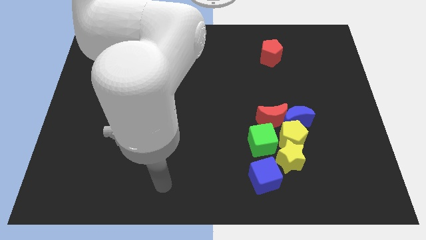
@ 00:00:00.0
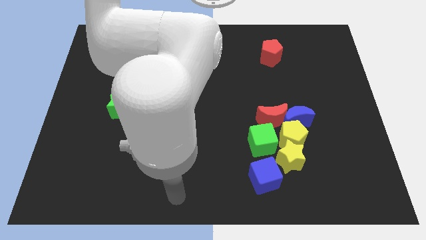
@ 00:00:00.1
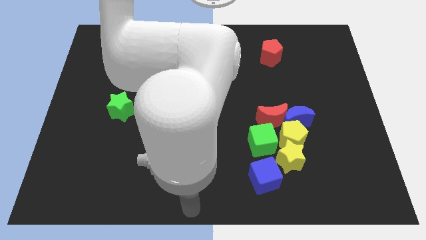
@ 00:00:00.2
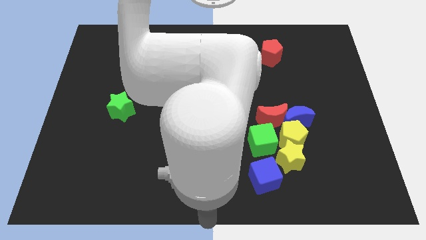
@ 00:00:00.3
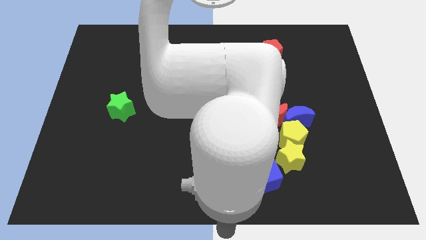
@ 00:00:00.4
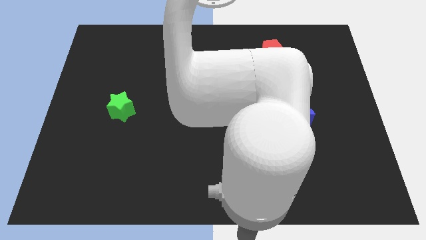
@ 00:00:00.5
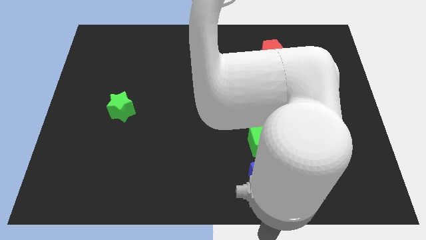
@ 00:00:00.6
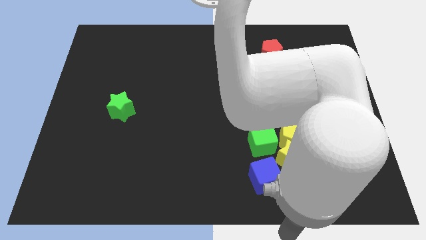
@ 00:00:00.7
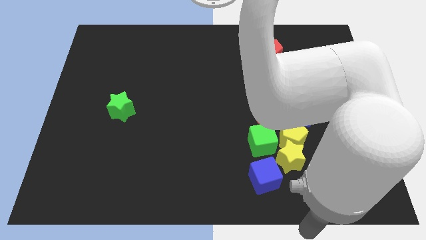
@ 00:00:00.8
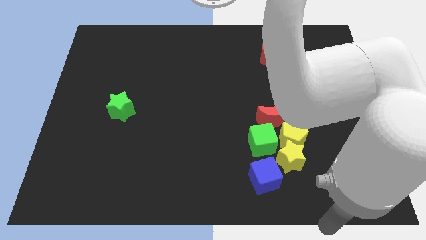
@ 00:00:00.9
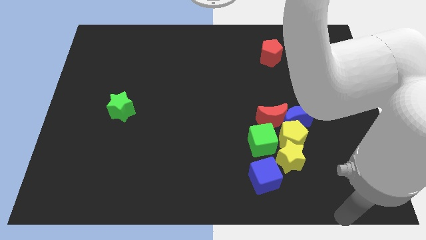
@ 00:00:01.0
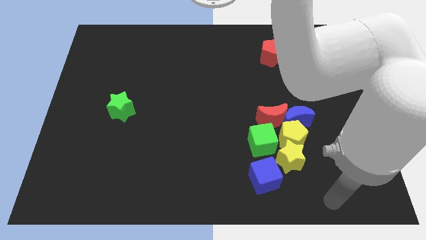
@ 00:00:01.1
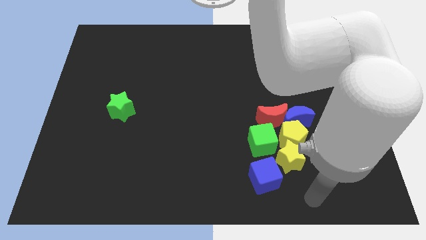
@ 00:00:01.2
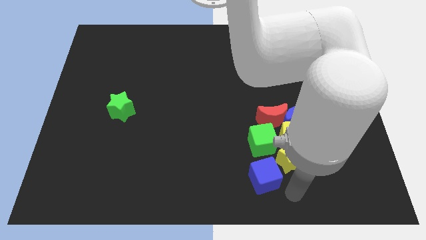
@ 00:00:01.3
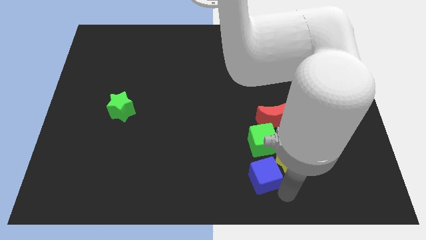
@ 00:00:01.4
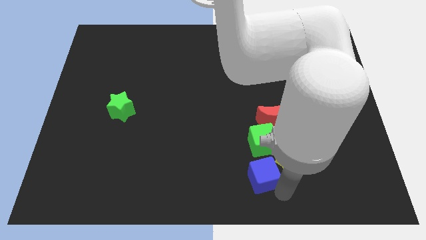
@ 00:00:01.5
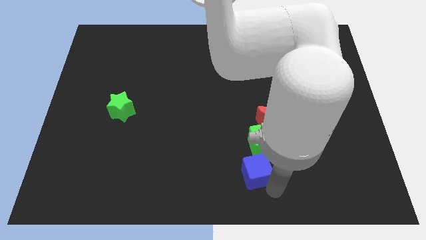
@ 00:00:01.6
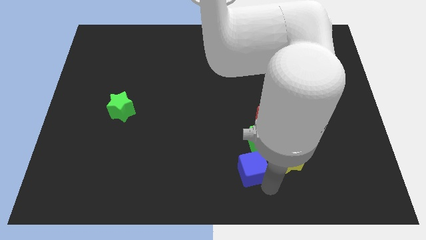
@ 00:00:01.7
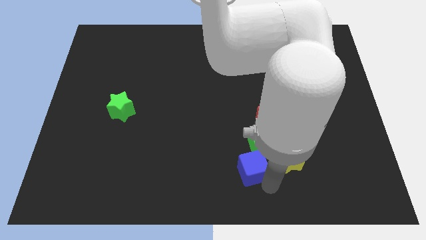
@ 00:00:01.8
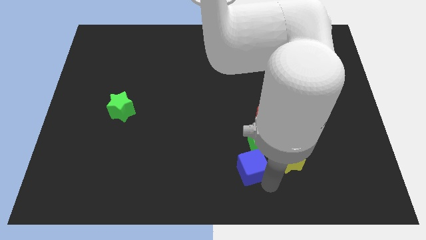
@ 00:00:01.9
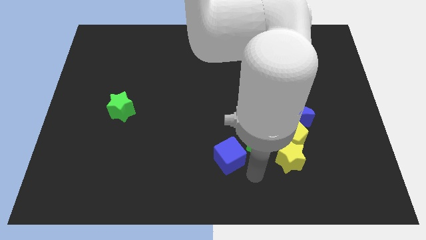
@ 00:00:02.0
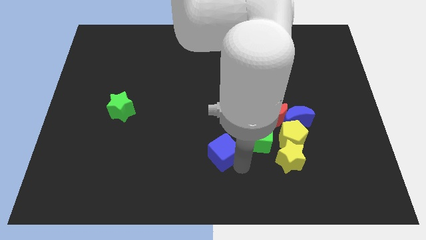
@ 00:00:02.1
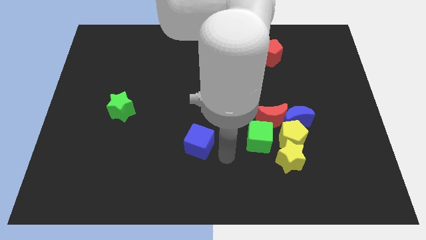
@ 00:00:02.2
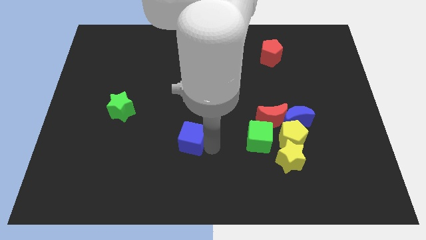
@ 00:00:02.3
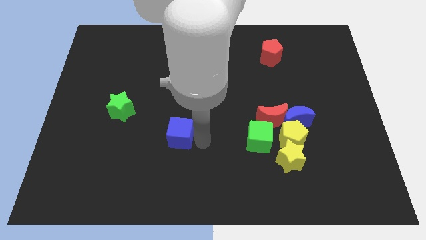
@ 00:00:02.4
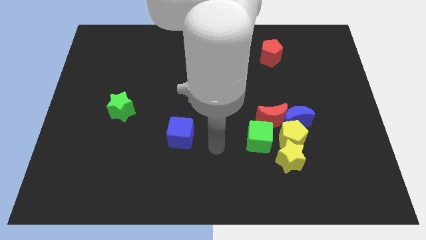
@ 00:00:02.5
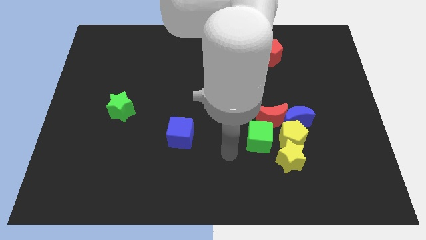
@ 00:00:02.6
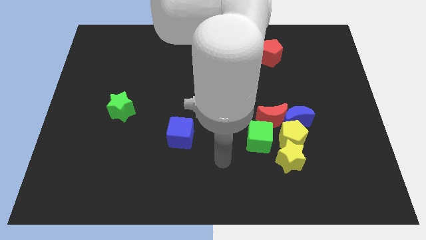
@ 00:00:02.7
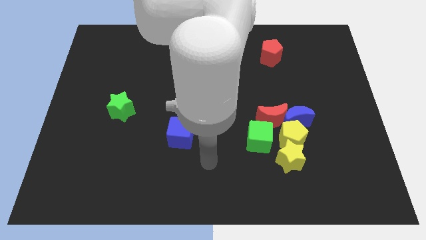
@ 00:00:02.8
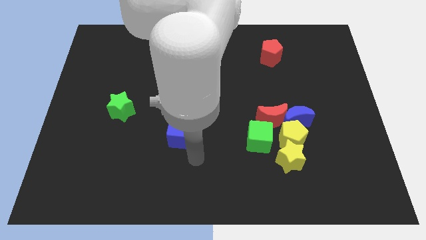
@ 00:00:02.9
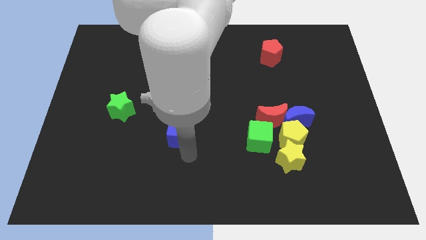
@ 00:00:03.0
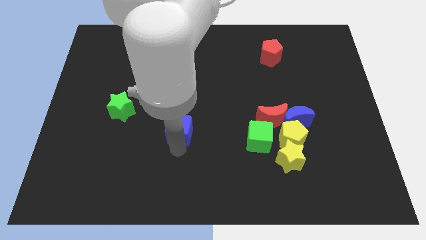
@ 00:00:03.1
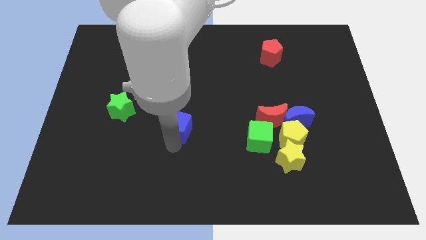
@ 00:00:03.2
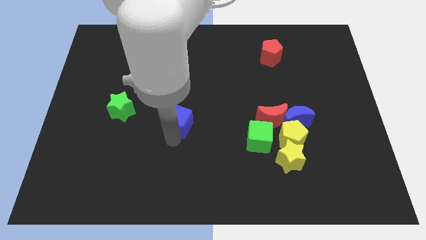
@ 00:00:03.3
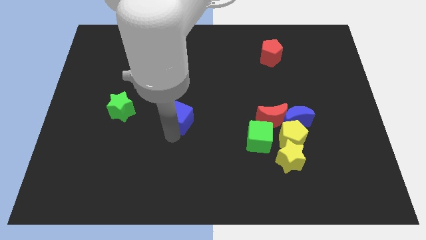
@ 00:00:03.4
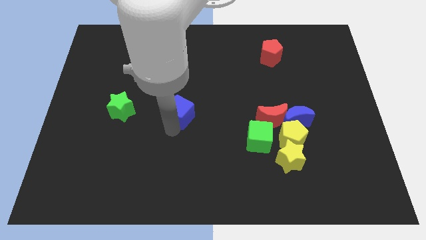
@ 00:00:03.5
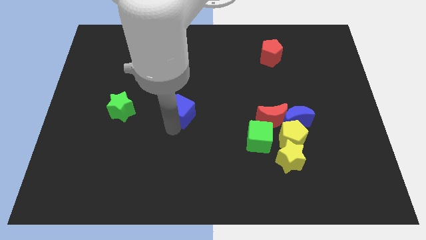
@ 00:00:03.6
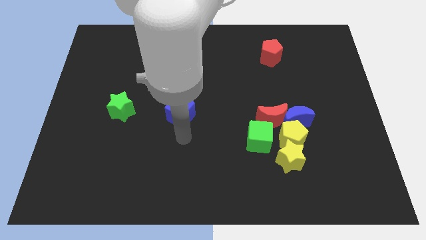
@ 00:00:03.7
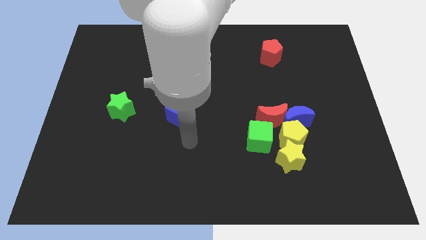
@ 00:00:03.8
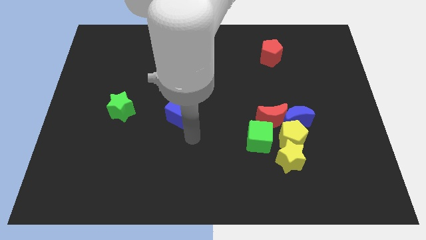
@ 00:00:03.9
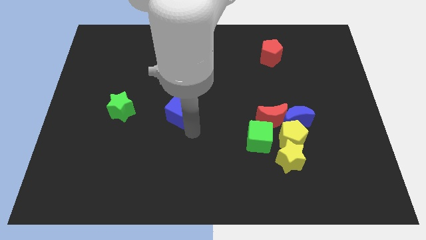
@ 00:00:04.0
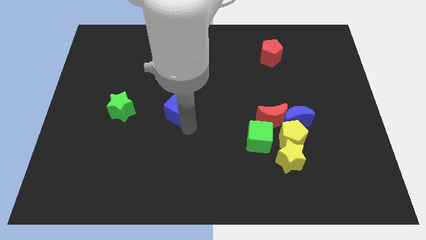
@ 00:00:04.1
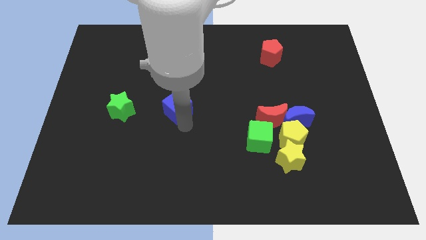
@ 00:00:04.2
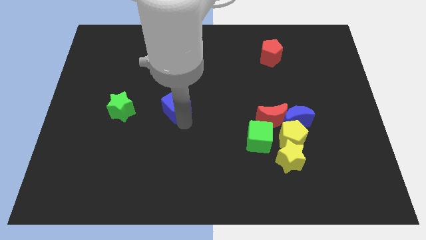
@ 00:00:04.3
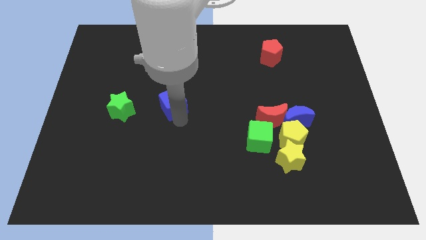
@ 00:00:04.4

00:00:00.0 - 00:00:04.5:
move the blue cube to the right side of the green star

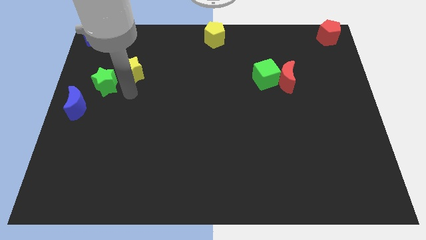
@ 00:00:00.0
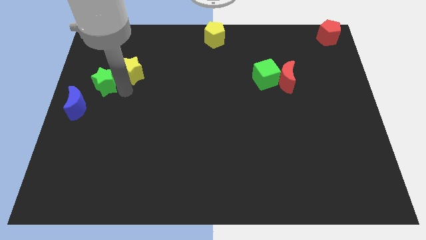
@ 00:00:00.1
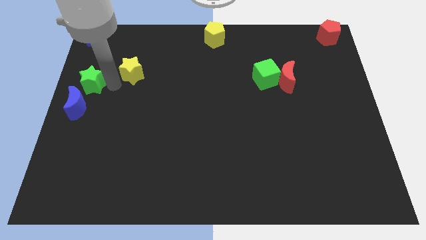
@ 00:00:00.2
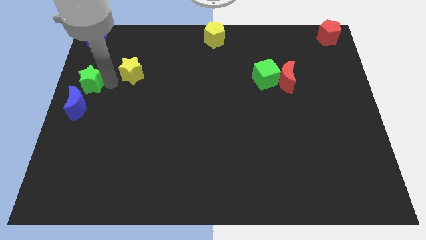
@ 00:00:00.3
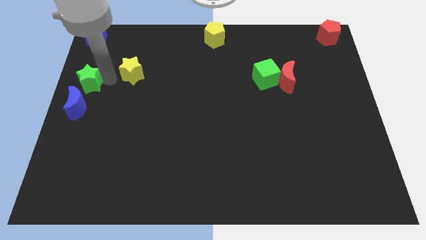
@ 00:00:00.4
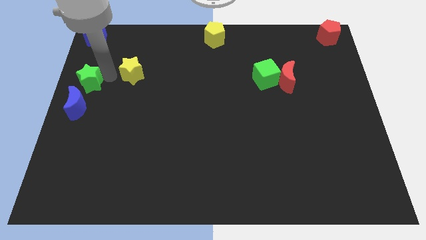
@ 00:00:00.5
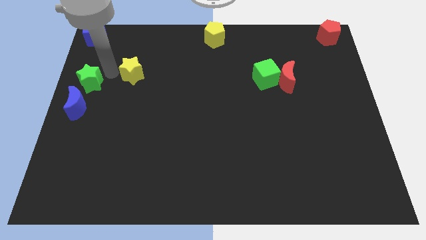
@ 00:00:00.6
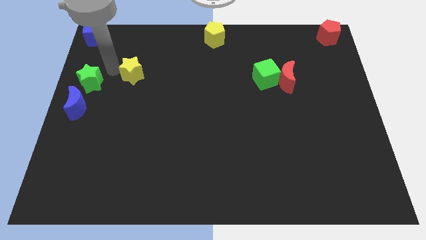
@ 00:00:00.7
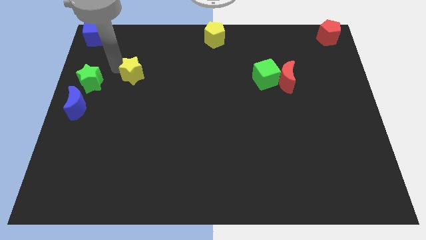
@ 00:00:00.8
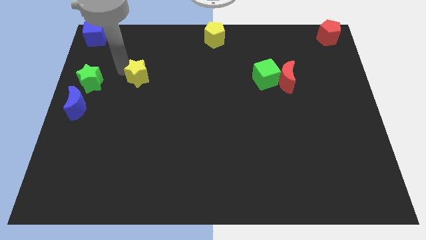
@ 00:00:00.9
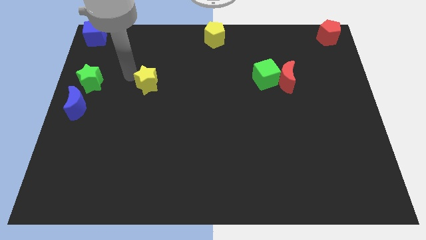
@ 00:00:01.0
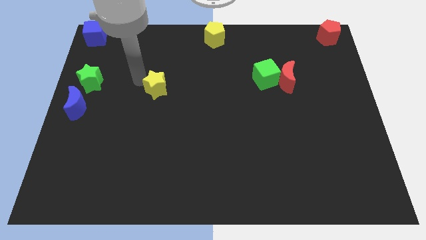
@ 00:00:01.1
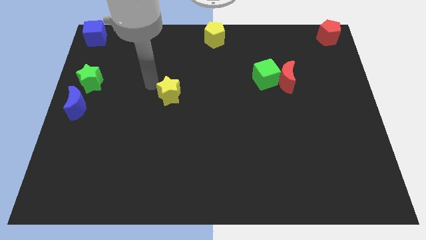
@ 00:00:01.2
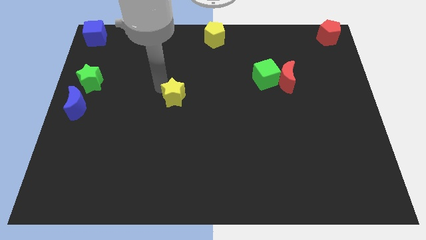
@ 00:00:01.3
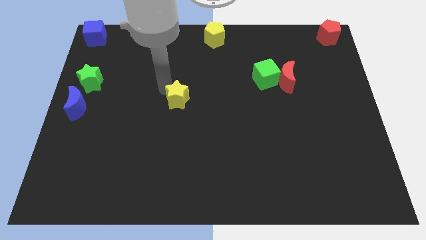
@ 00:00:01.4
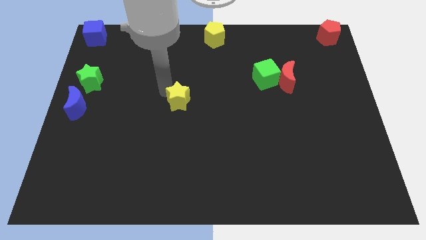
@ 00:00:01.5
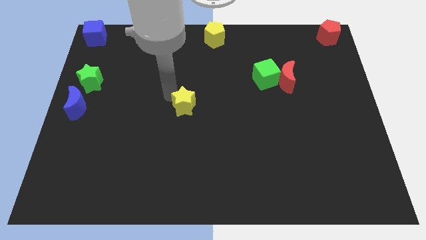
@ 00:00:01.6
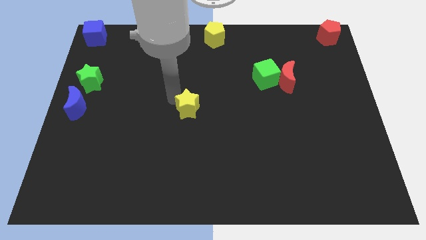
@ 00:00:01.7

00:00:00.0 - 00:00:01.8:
push the yellow star to the center of the board

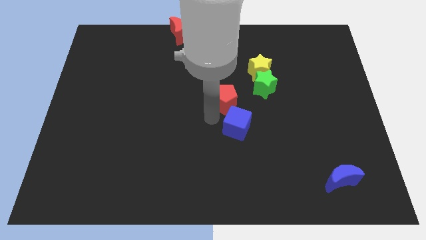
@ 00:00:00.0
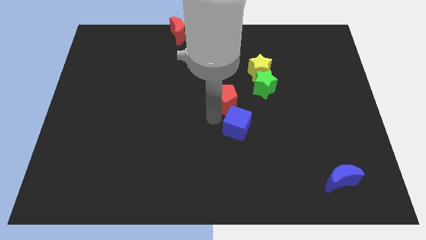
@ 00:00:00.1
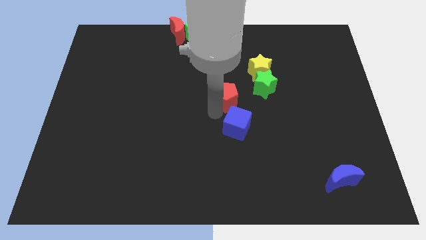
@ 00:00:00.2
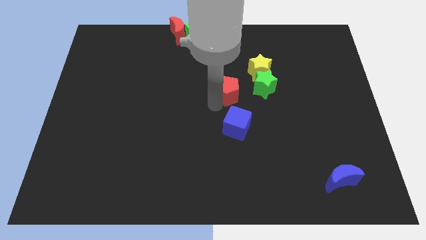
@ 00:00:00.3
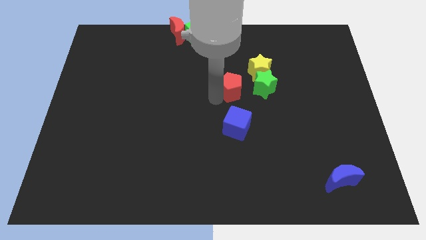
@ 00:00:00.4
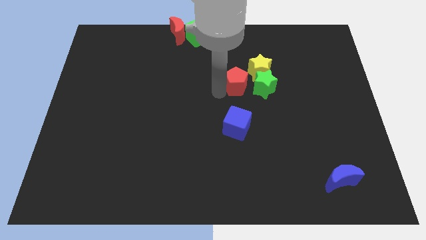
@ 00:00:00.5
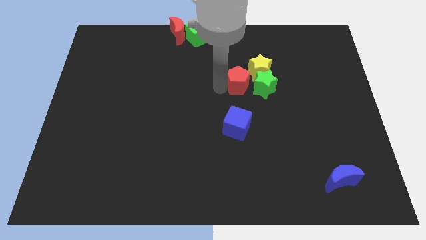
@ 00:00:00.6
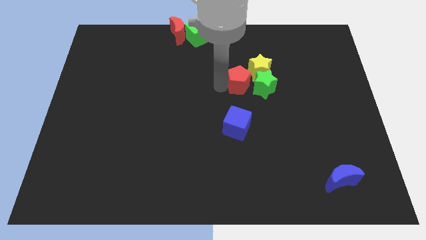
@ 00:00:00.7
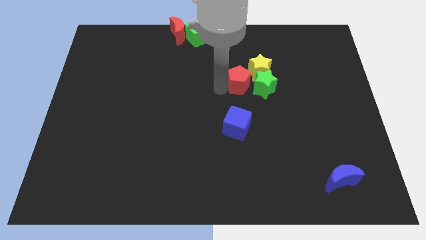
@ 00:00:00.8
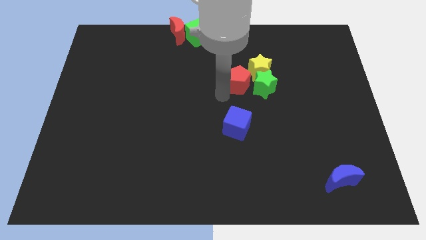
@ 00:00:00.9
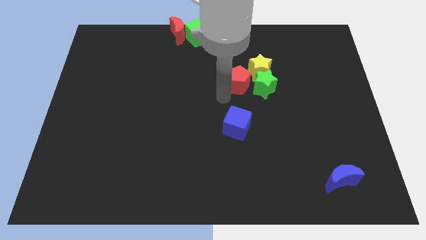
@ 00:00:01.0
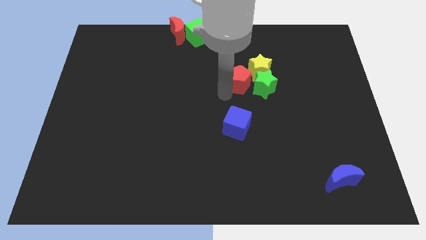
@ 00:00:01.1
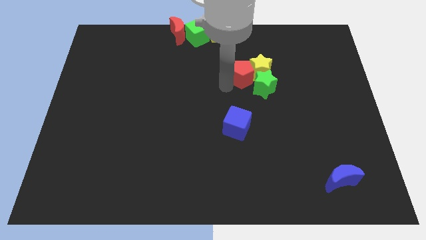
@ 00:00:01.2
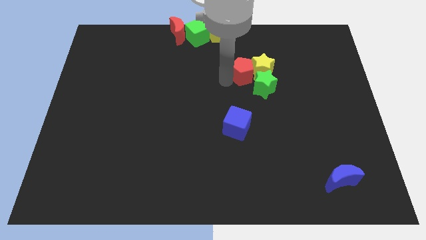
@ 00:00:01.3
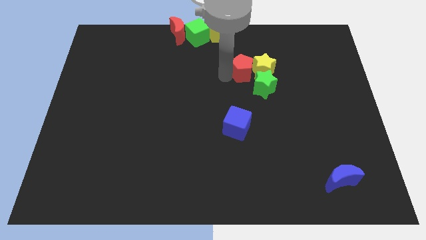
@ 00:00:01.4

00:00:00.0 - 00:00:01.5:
push the red pentagon into the left side of the yellow star

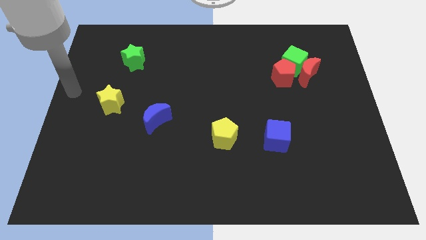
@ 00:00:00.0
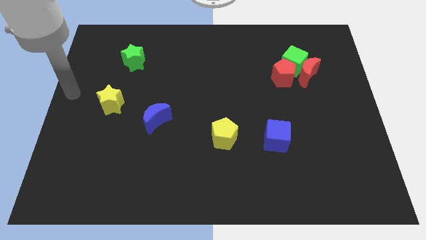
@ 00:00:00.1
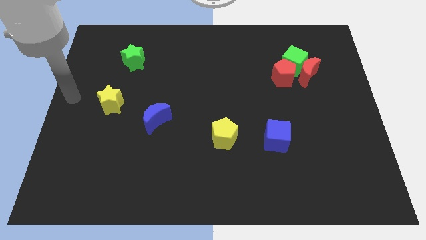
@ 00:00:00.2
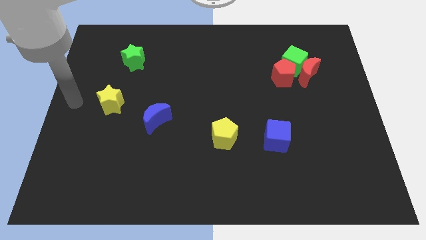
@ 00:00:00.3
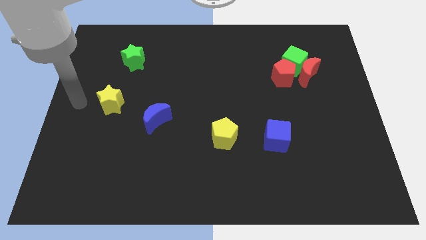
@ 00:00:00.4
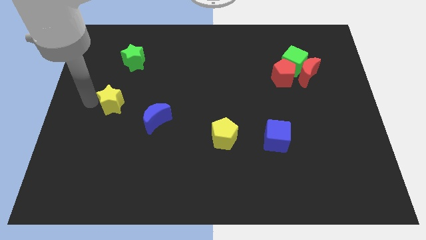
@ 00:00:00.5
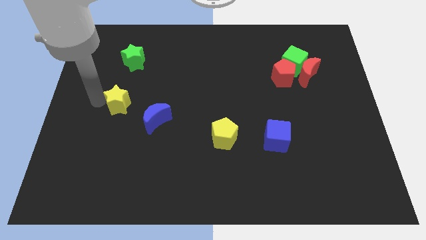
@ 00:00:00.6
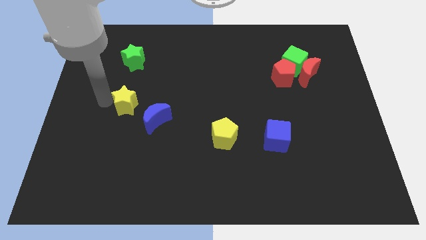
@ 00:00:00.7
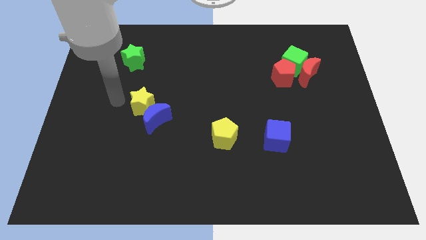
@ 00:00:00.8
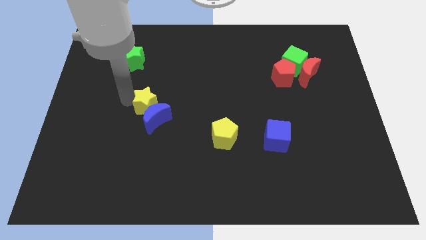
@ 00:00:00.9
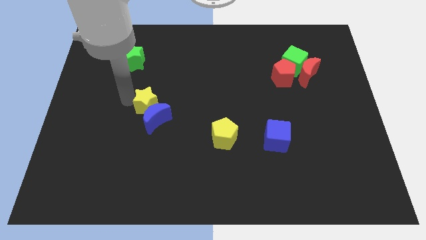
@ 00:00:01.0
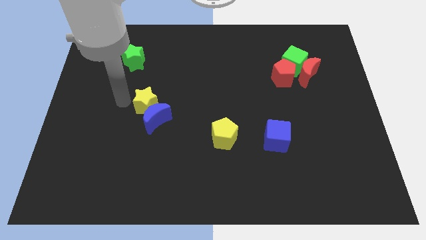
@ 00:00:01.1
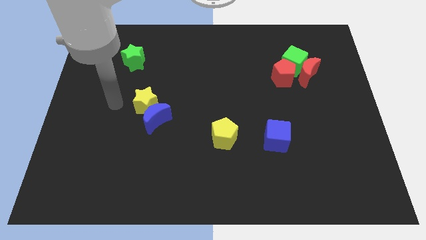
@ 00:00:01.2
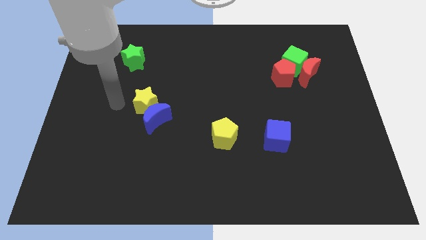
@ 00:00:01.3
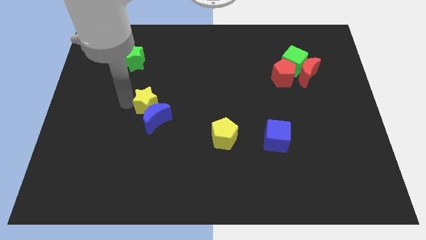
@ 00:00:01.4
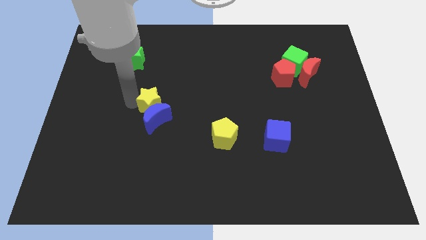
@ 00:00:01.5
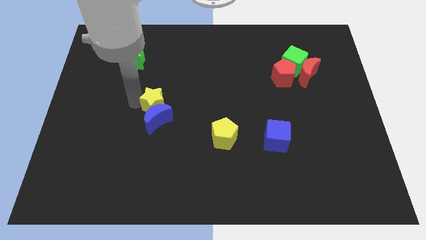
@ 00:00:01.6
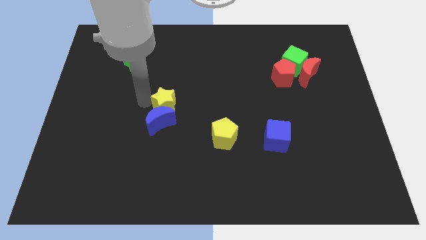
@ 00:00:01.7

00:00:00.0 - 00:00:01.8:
move the yellow star into the top side of the blue moon
